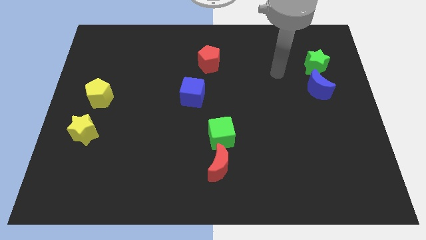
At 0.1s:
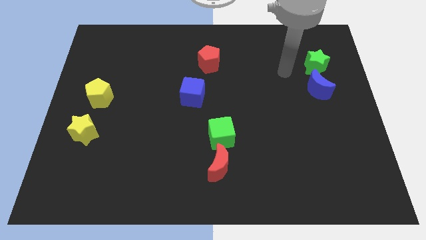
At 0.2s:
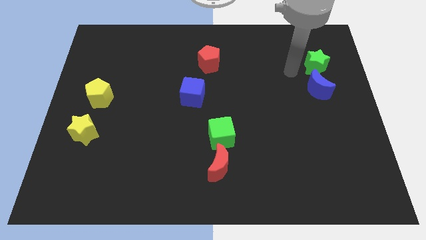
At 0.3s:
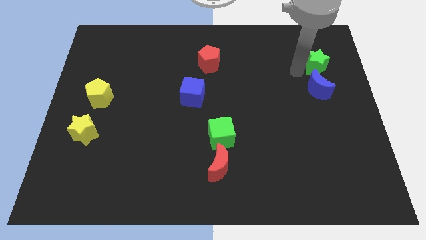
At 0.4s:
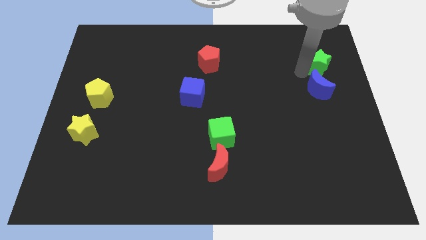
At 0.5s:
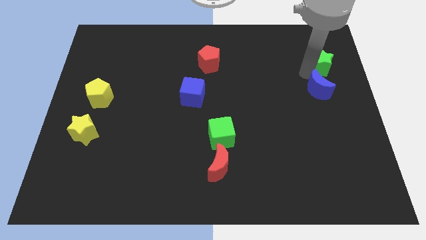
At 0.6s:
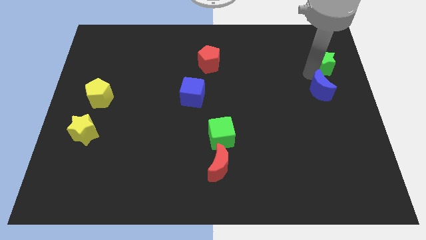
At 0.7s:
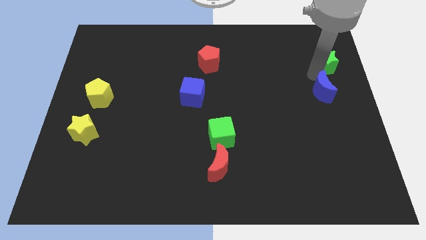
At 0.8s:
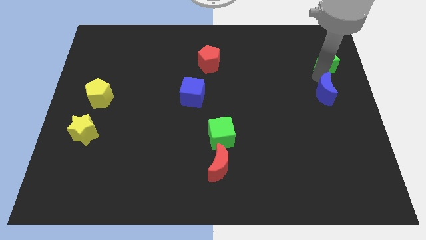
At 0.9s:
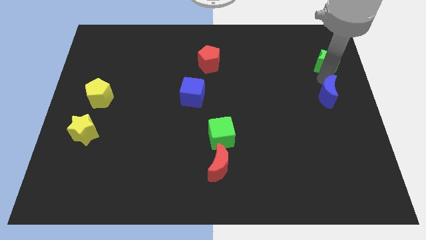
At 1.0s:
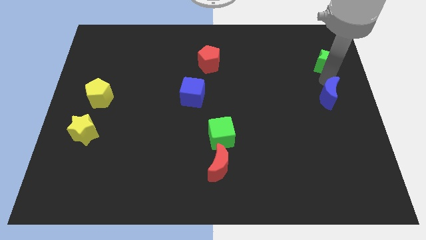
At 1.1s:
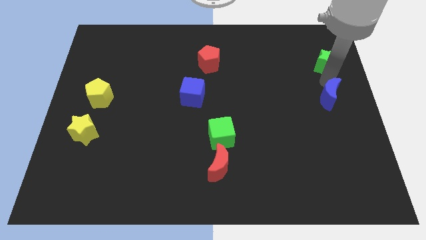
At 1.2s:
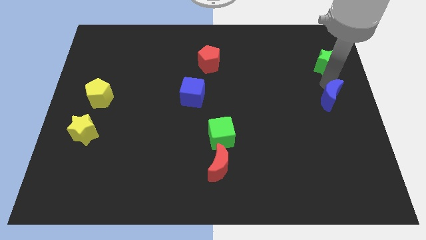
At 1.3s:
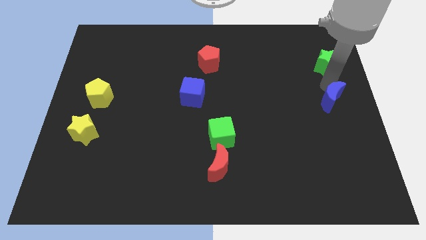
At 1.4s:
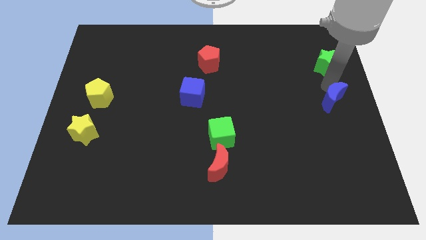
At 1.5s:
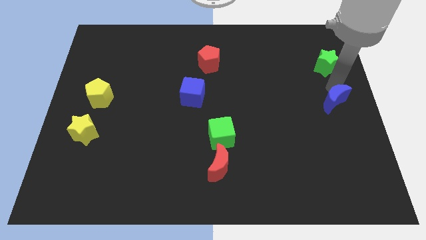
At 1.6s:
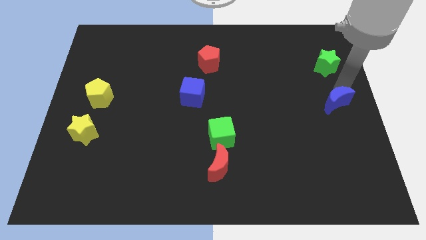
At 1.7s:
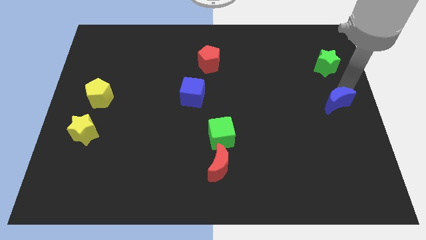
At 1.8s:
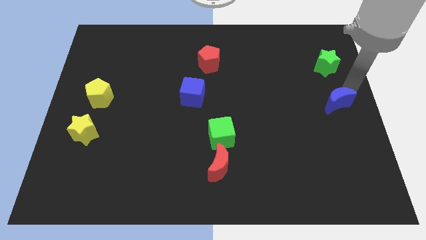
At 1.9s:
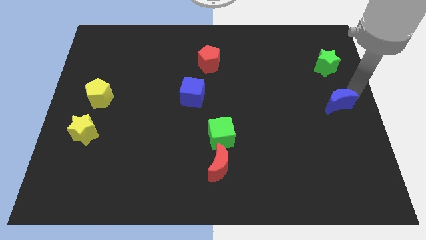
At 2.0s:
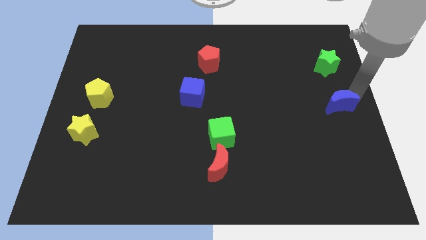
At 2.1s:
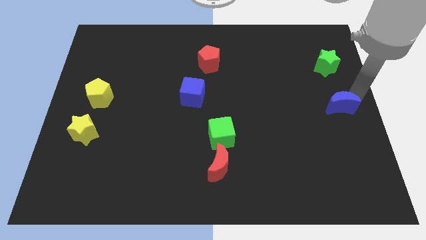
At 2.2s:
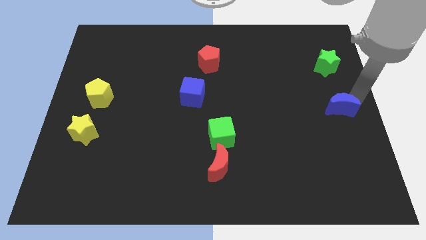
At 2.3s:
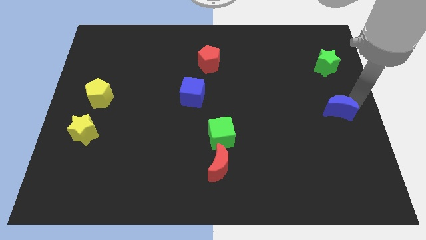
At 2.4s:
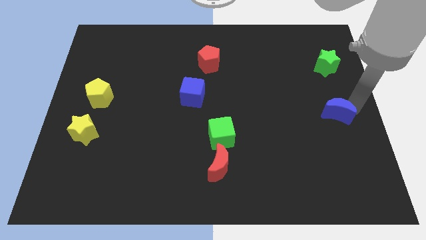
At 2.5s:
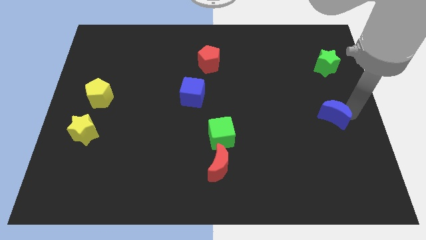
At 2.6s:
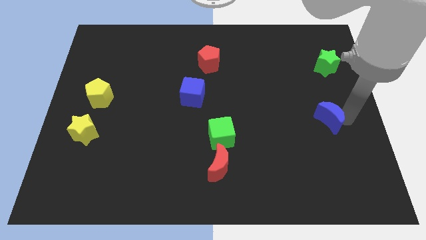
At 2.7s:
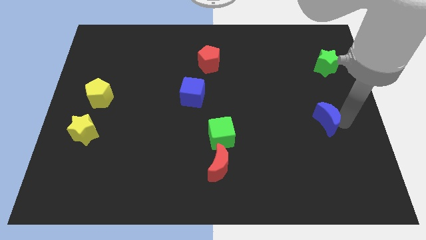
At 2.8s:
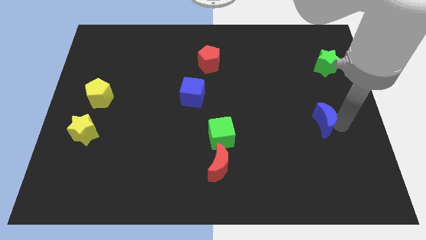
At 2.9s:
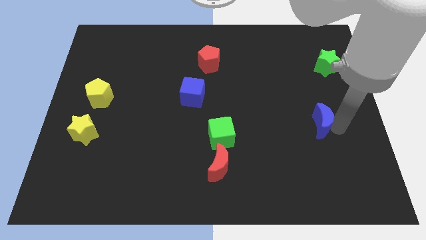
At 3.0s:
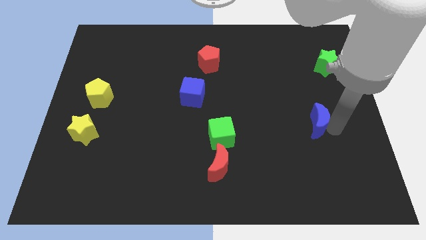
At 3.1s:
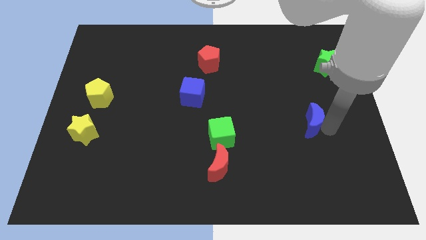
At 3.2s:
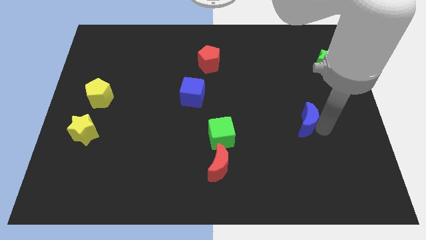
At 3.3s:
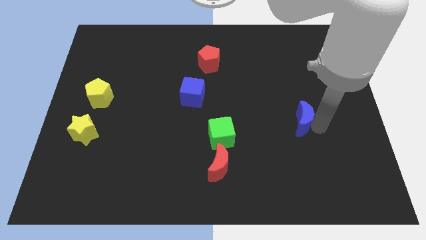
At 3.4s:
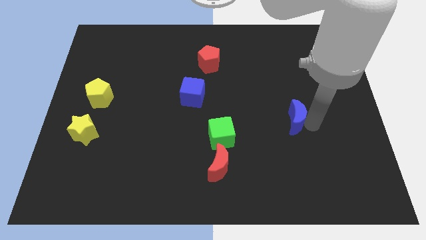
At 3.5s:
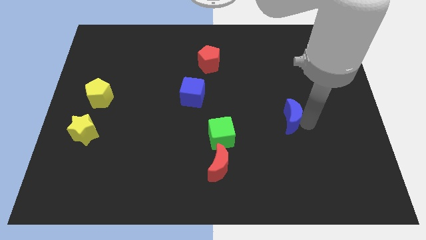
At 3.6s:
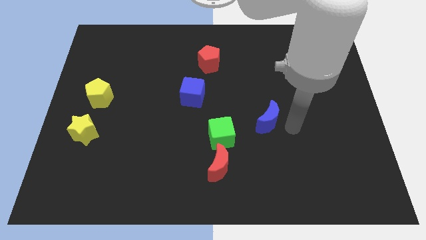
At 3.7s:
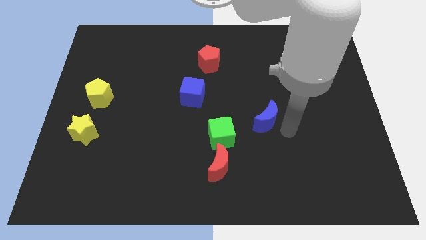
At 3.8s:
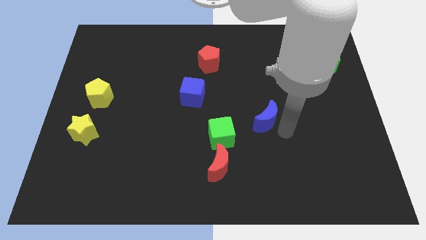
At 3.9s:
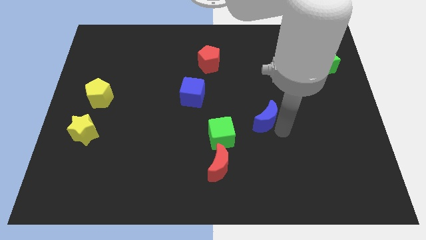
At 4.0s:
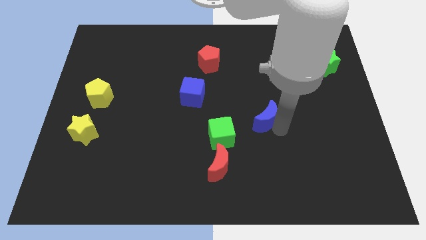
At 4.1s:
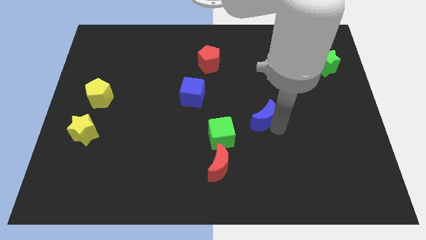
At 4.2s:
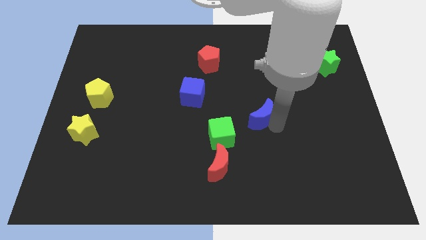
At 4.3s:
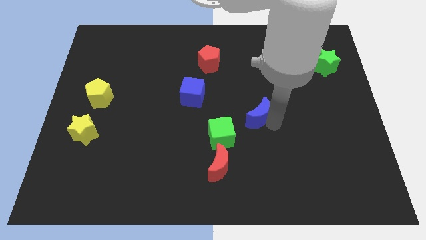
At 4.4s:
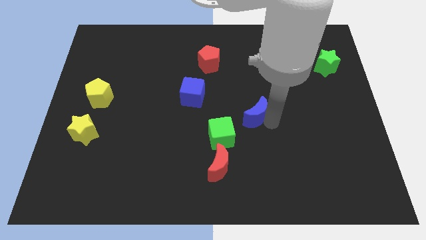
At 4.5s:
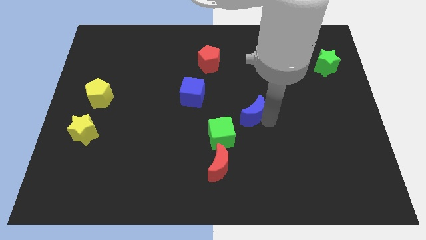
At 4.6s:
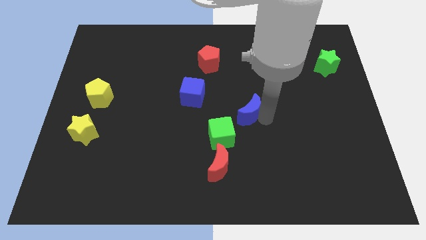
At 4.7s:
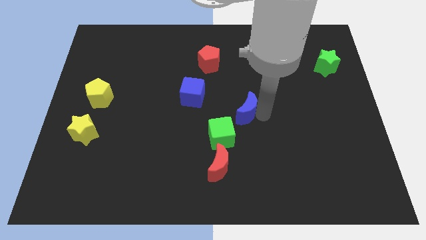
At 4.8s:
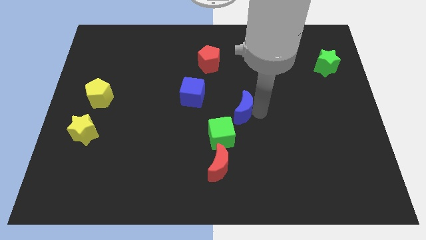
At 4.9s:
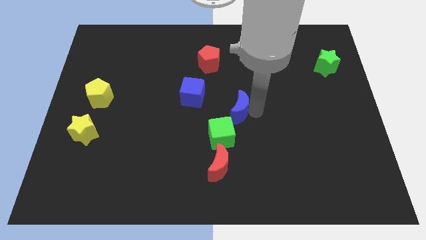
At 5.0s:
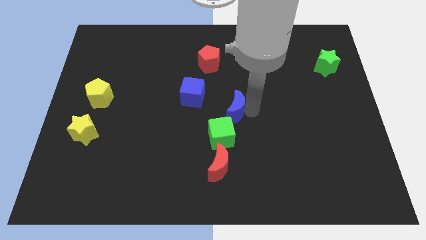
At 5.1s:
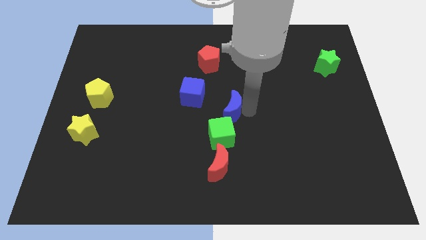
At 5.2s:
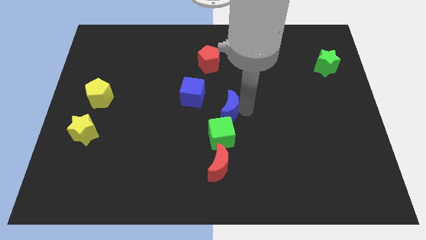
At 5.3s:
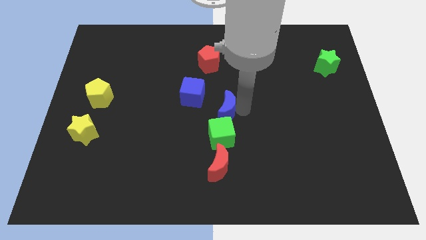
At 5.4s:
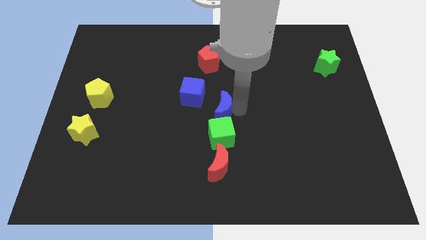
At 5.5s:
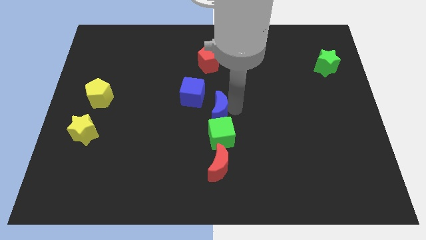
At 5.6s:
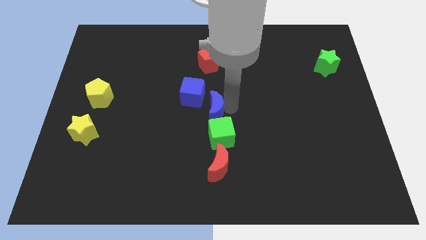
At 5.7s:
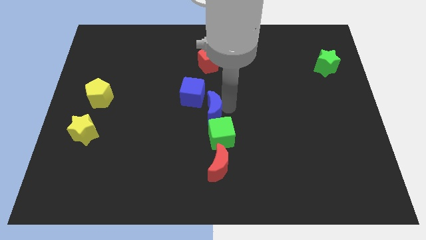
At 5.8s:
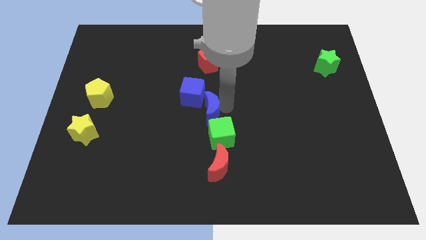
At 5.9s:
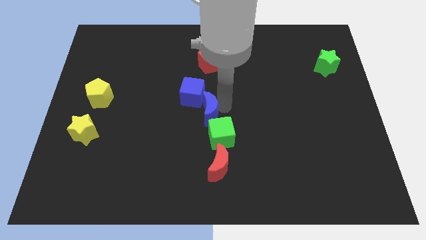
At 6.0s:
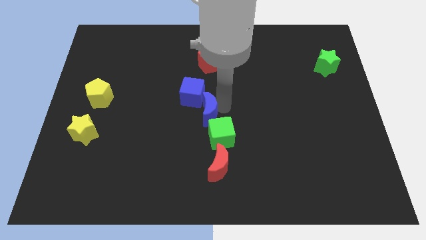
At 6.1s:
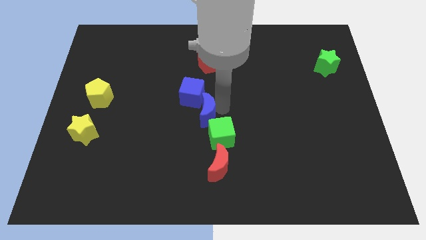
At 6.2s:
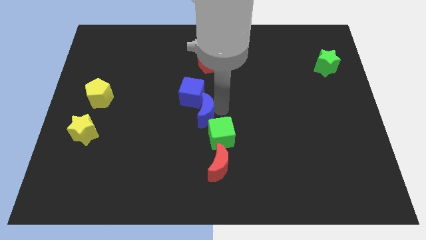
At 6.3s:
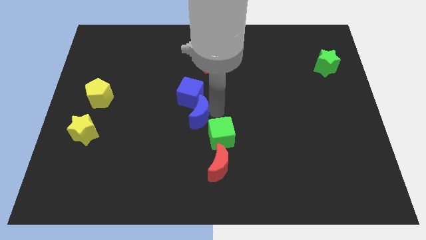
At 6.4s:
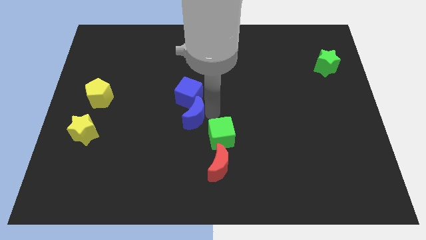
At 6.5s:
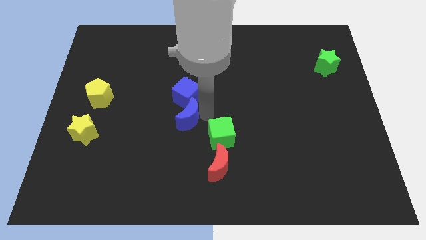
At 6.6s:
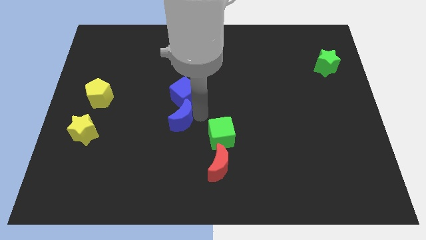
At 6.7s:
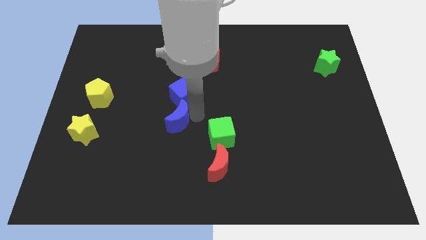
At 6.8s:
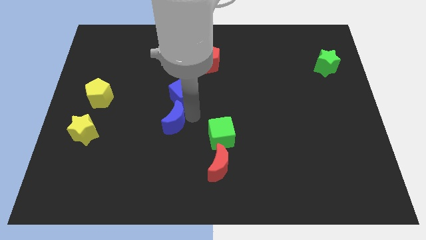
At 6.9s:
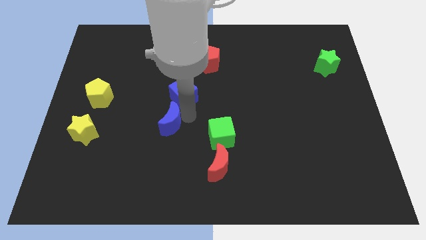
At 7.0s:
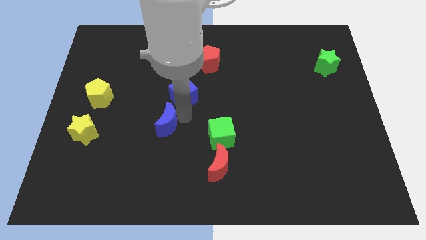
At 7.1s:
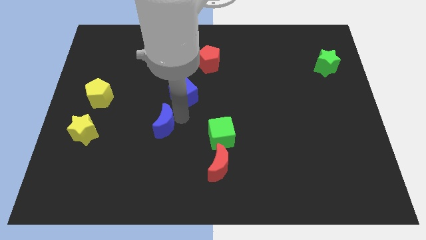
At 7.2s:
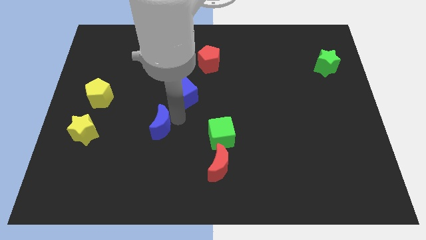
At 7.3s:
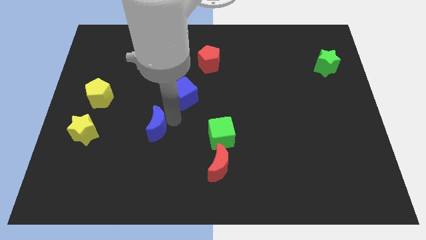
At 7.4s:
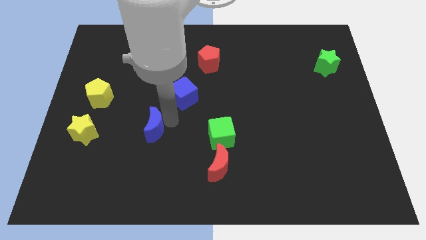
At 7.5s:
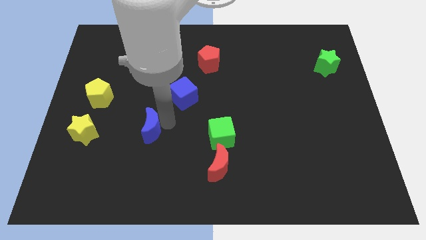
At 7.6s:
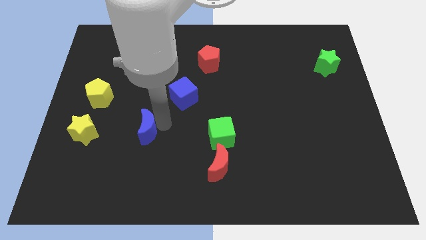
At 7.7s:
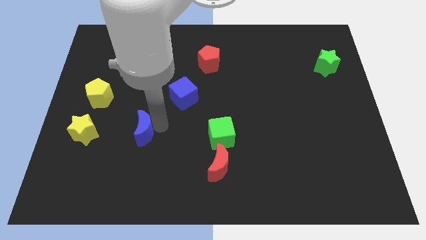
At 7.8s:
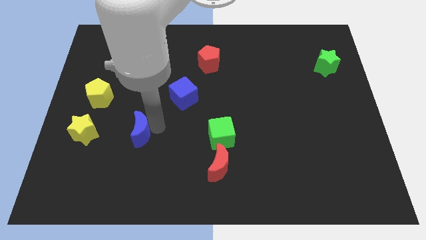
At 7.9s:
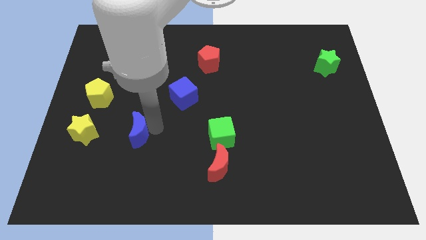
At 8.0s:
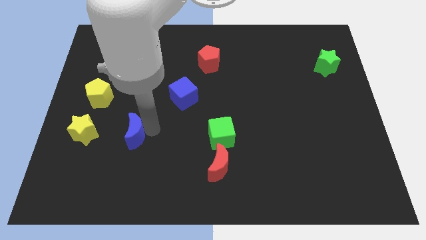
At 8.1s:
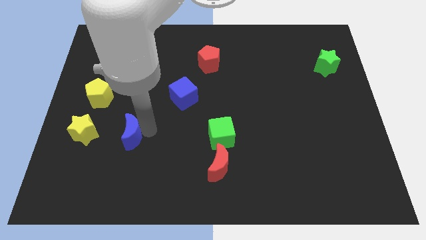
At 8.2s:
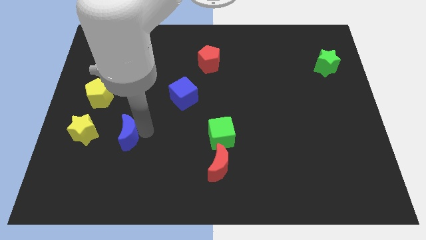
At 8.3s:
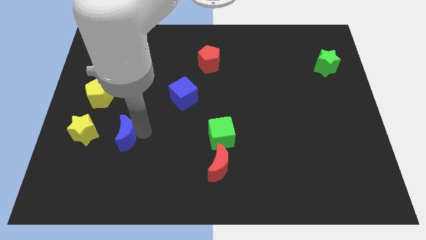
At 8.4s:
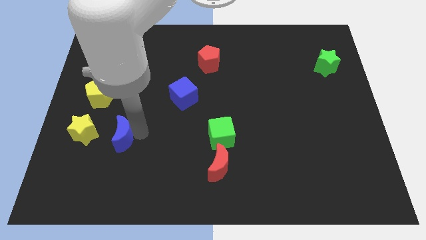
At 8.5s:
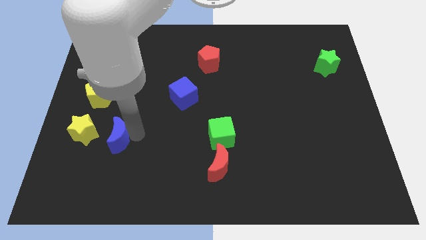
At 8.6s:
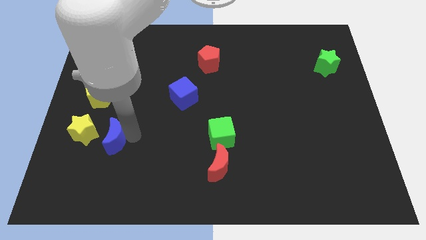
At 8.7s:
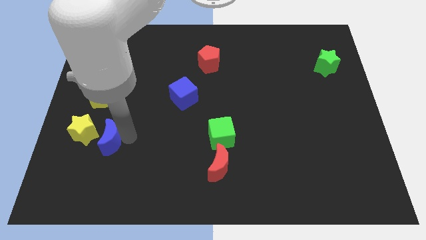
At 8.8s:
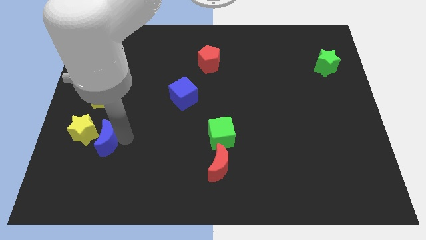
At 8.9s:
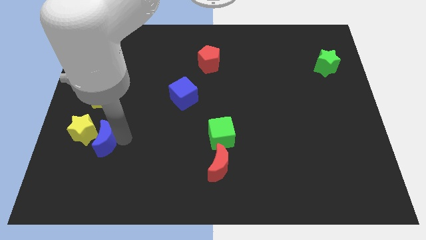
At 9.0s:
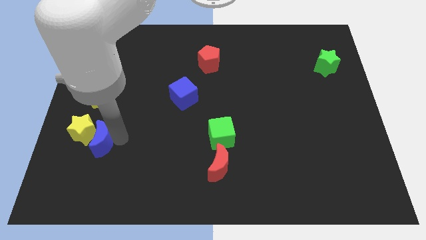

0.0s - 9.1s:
put the blue moon close to the yellow star
